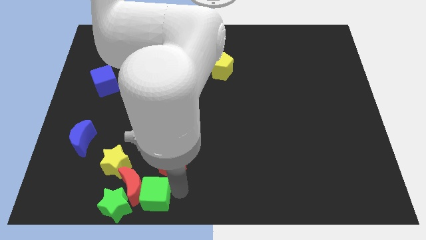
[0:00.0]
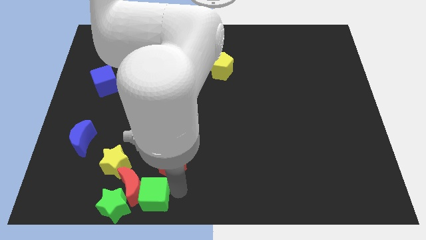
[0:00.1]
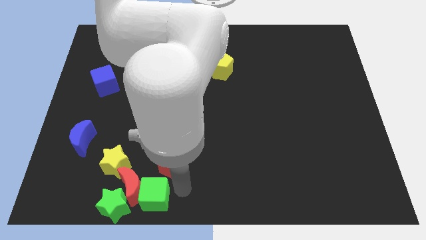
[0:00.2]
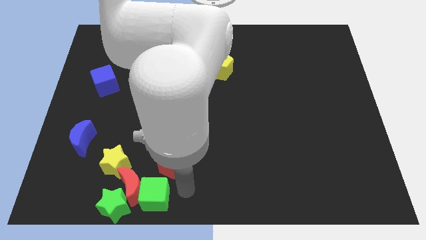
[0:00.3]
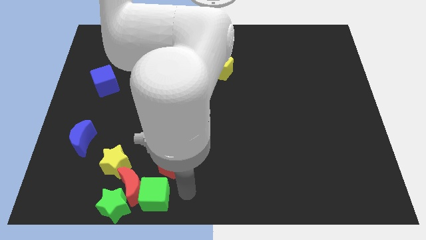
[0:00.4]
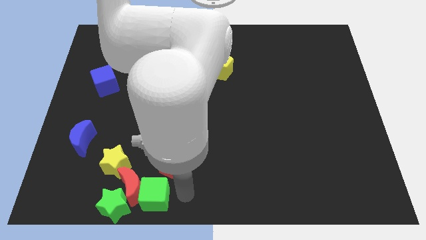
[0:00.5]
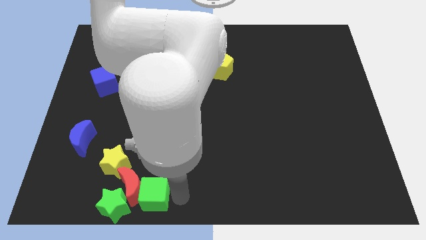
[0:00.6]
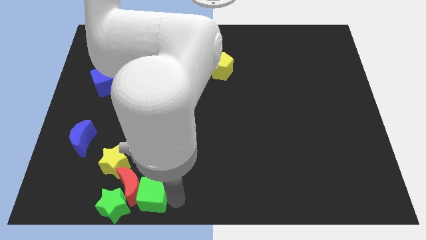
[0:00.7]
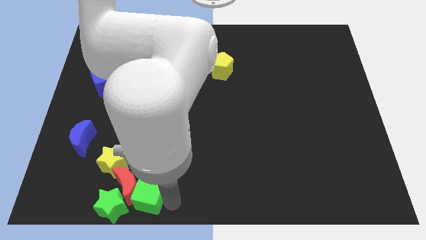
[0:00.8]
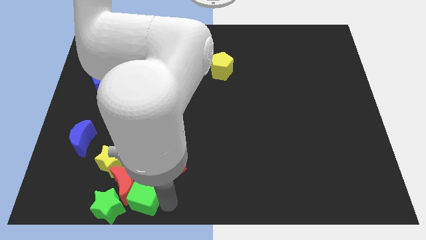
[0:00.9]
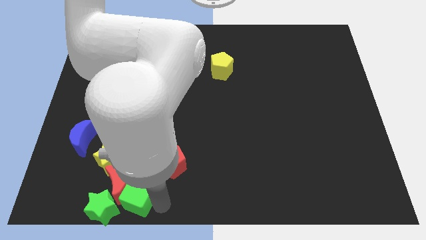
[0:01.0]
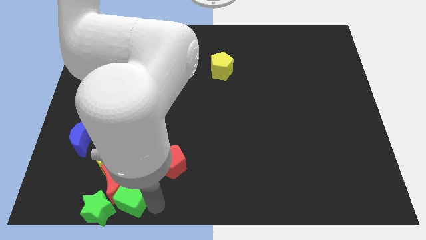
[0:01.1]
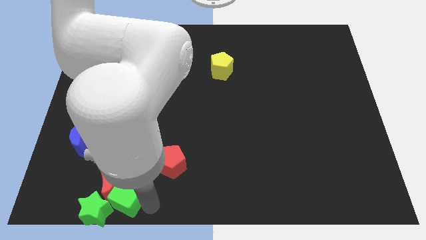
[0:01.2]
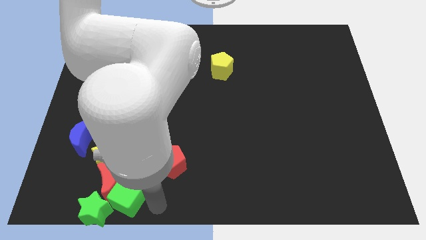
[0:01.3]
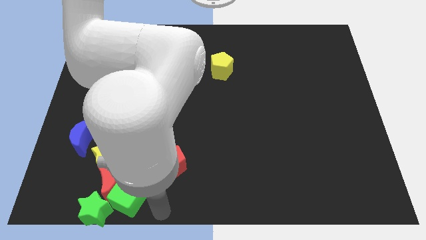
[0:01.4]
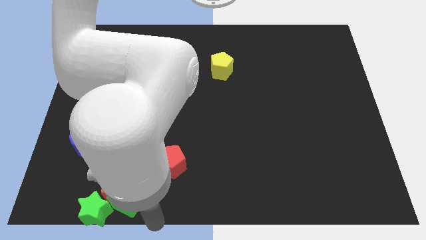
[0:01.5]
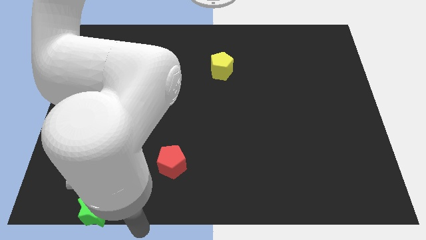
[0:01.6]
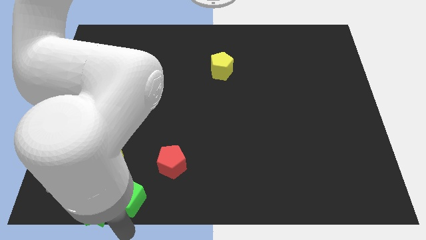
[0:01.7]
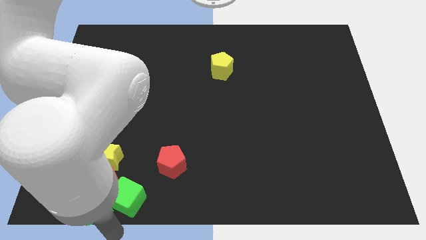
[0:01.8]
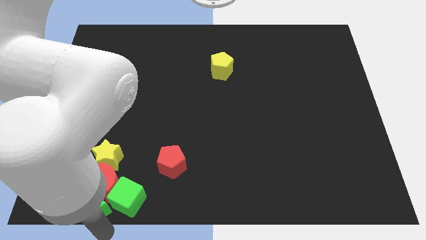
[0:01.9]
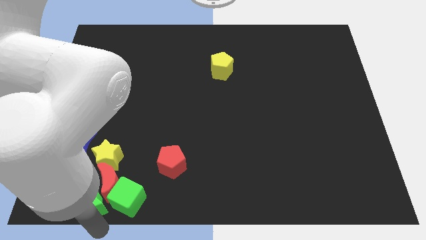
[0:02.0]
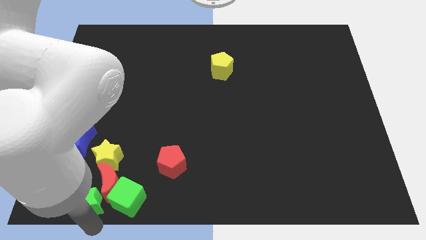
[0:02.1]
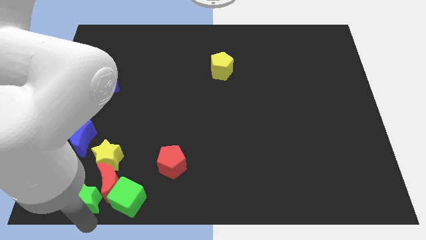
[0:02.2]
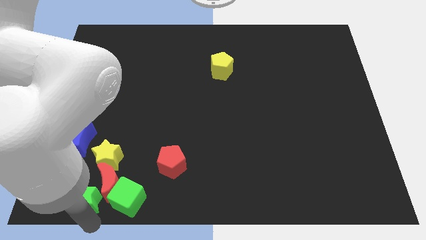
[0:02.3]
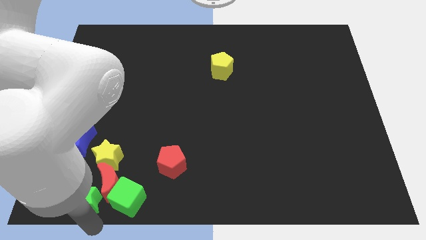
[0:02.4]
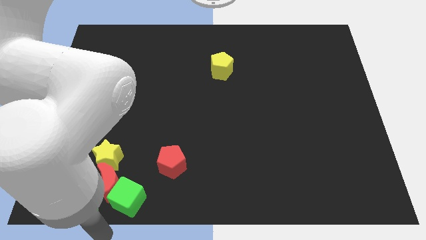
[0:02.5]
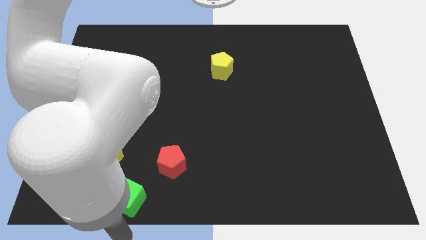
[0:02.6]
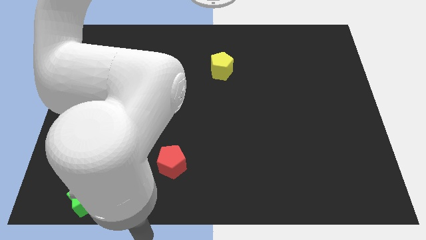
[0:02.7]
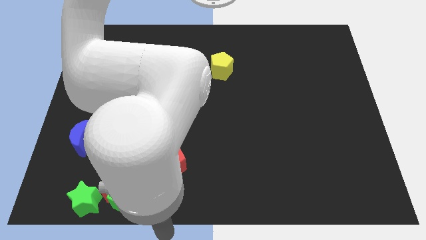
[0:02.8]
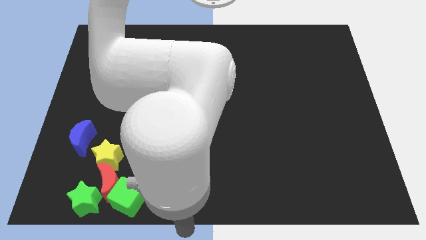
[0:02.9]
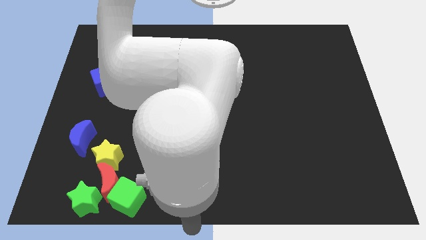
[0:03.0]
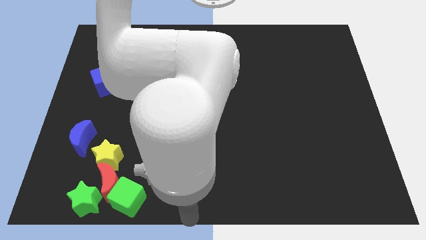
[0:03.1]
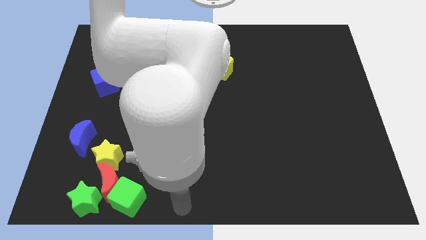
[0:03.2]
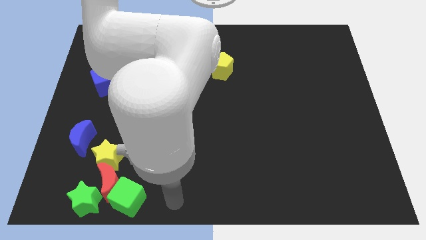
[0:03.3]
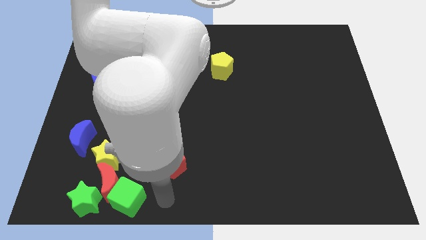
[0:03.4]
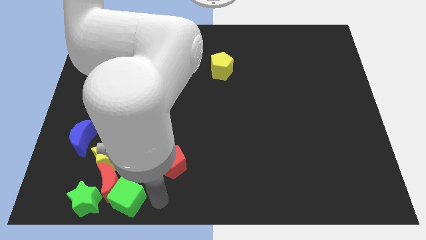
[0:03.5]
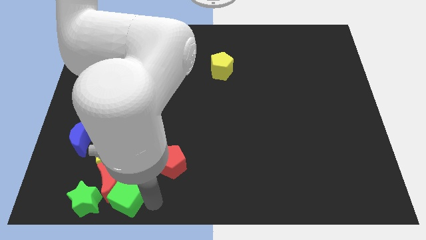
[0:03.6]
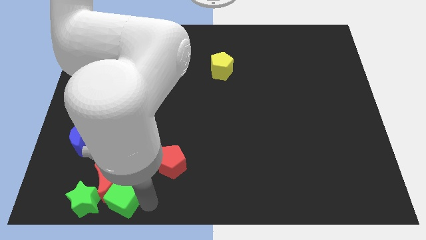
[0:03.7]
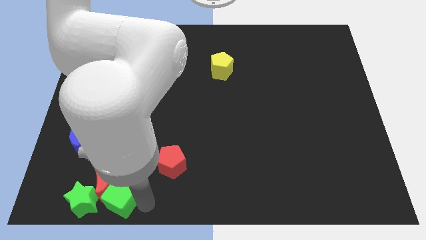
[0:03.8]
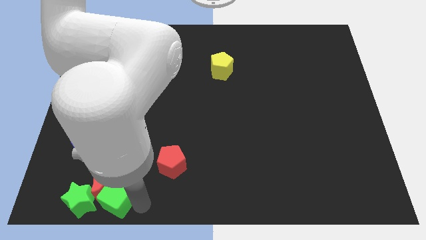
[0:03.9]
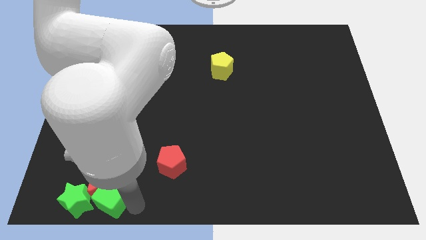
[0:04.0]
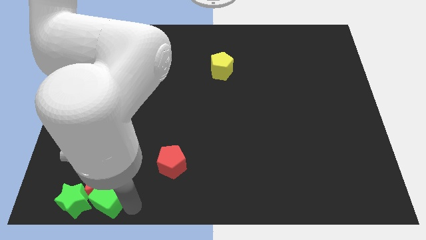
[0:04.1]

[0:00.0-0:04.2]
slide both the green blocks along with the red moon towards the bottom left side of the board

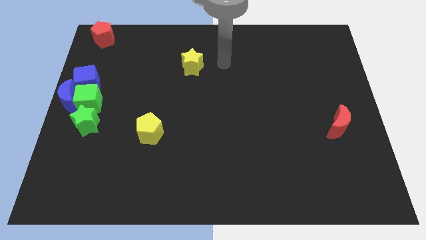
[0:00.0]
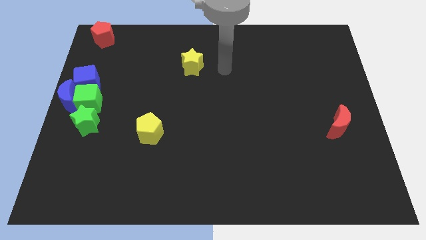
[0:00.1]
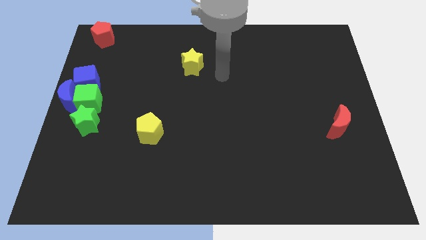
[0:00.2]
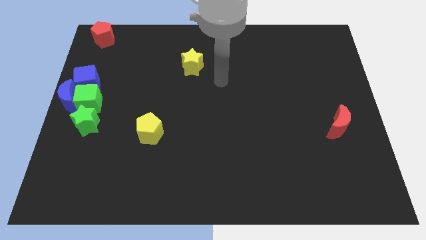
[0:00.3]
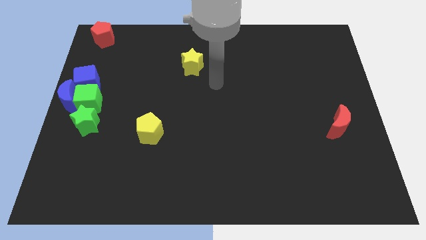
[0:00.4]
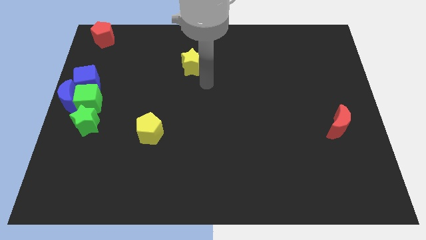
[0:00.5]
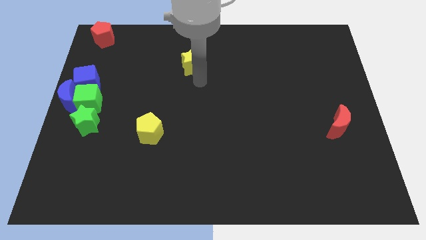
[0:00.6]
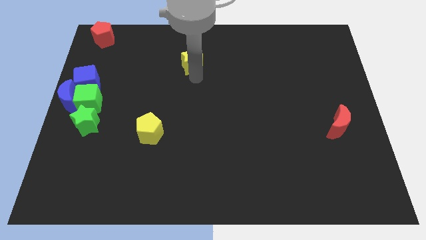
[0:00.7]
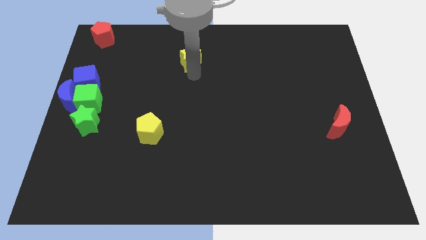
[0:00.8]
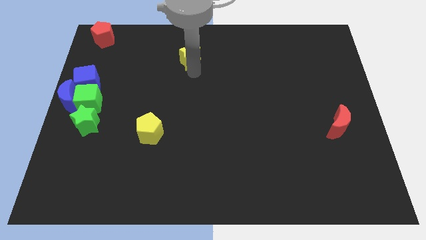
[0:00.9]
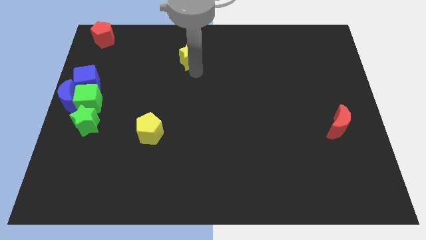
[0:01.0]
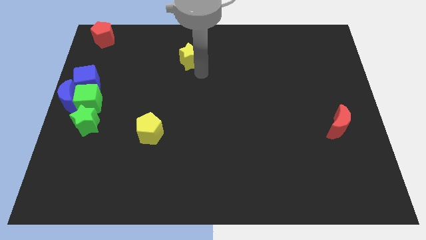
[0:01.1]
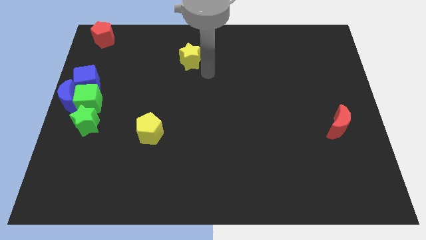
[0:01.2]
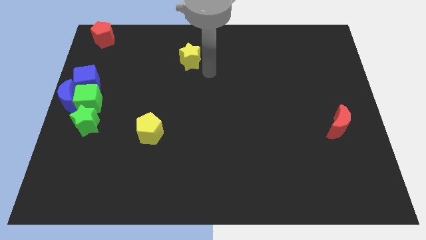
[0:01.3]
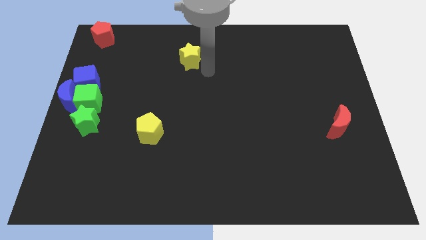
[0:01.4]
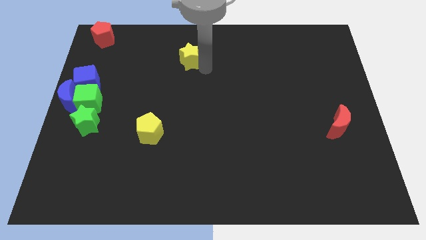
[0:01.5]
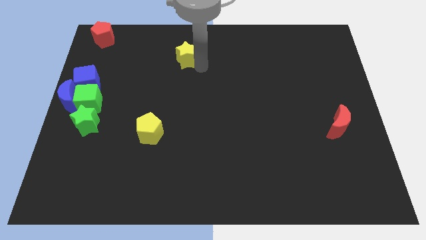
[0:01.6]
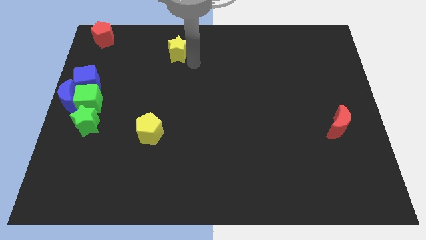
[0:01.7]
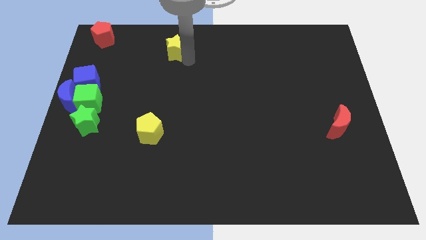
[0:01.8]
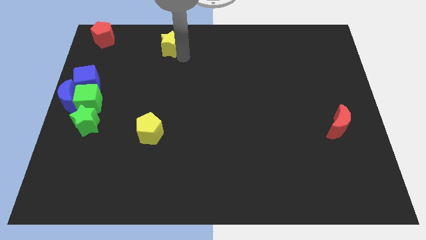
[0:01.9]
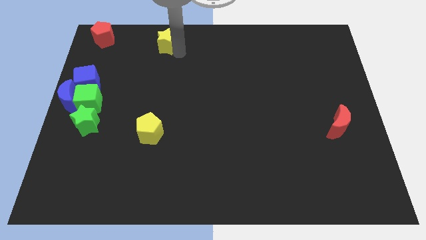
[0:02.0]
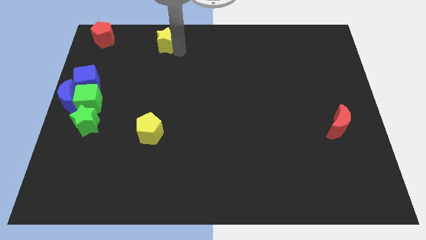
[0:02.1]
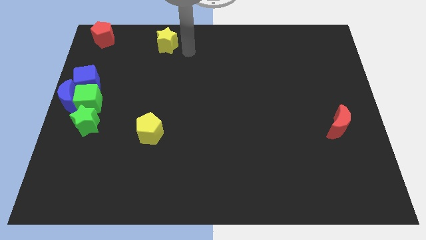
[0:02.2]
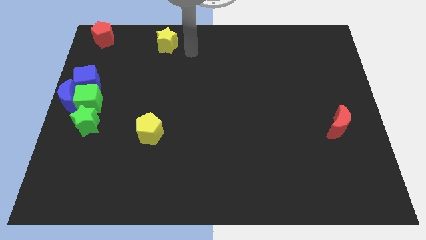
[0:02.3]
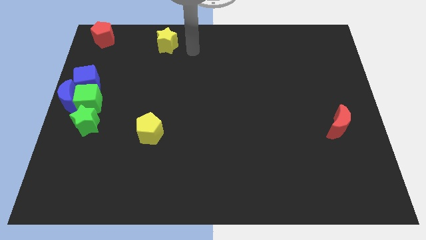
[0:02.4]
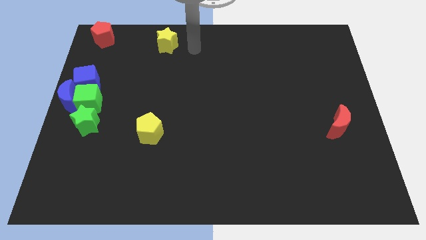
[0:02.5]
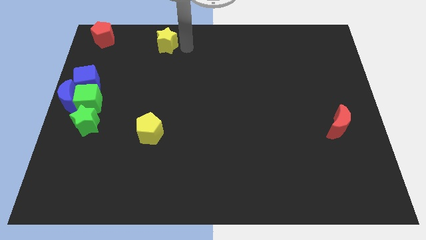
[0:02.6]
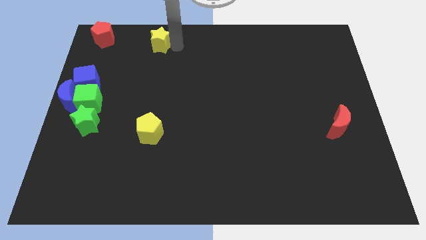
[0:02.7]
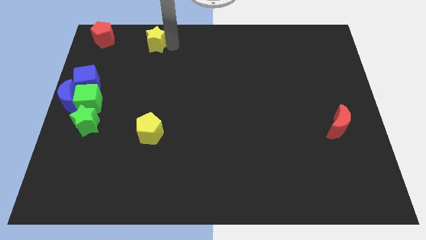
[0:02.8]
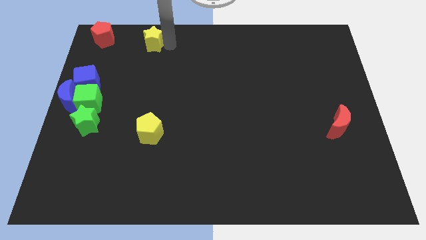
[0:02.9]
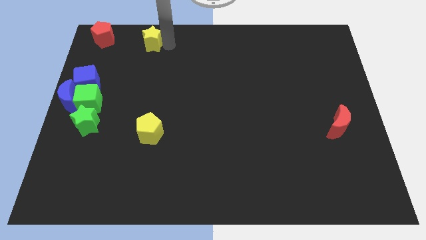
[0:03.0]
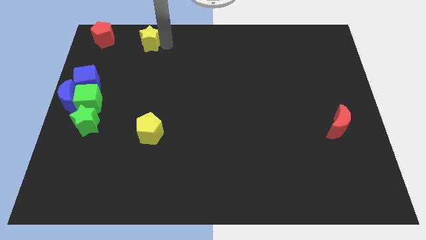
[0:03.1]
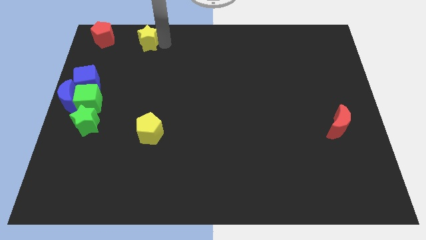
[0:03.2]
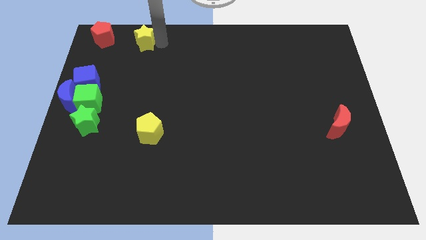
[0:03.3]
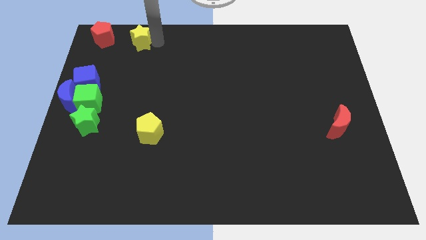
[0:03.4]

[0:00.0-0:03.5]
place the yellow star to the right side of red pentagon

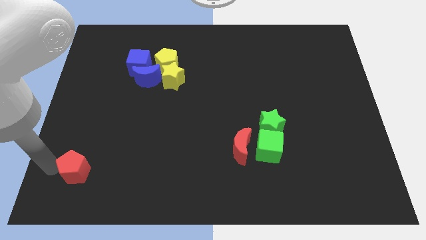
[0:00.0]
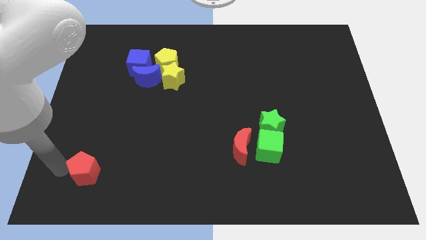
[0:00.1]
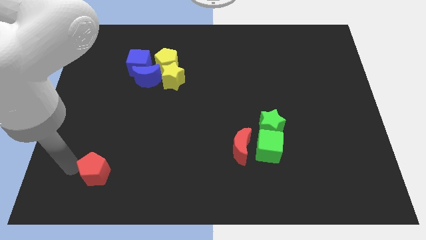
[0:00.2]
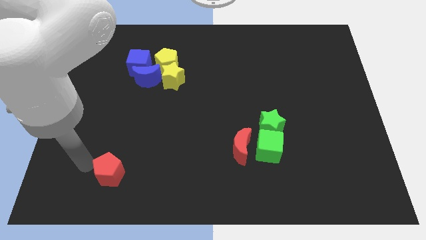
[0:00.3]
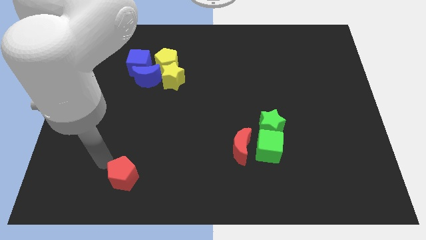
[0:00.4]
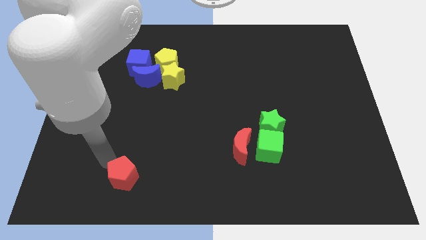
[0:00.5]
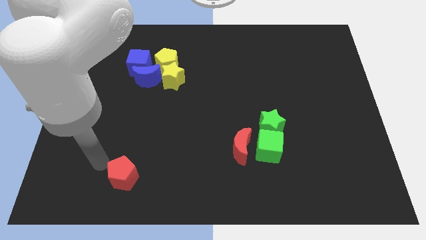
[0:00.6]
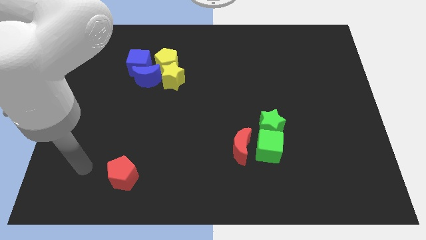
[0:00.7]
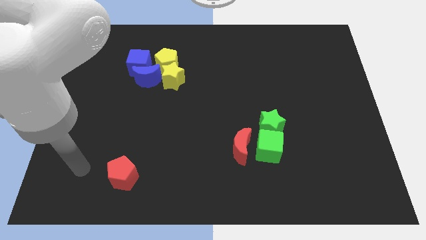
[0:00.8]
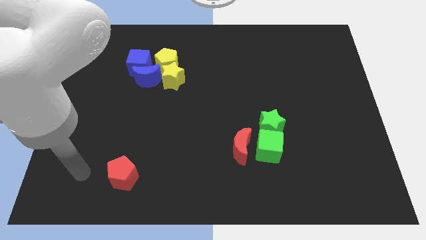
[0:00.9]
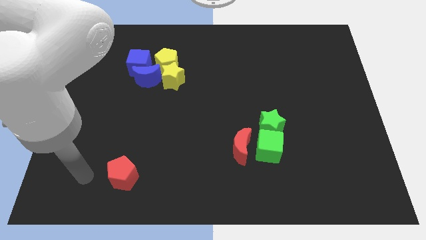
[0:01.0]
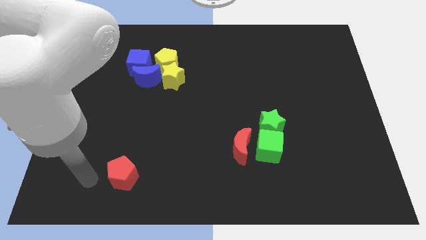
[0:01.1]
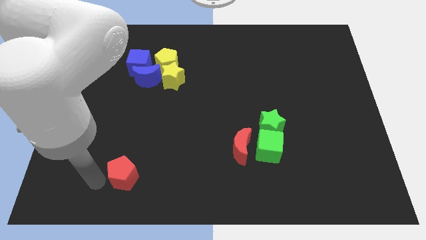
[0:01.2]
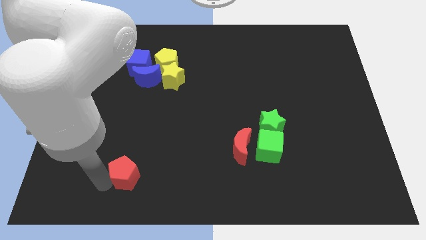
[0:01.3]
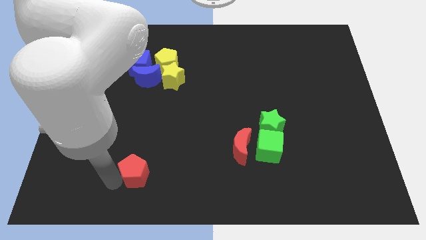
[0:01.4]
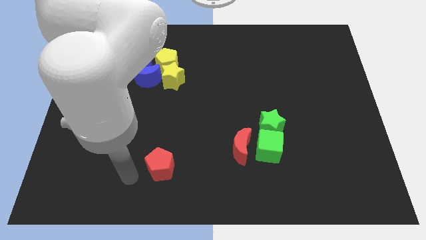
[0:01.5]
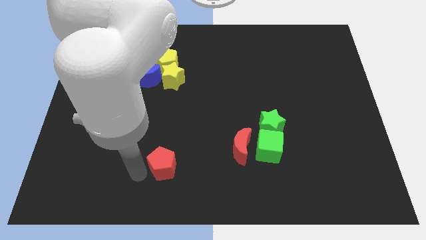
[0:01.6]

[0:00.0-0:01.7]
push the red pentagon towards the red crescent
